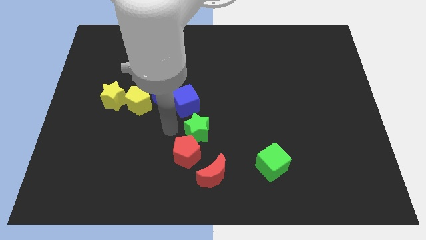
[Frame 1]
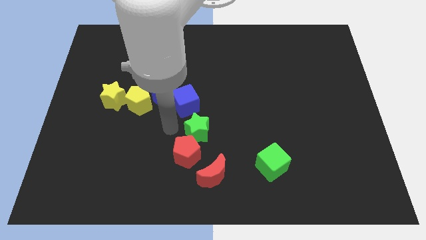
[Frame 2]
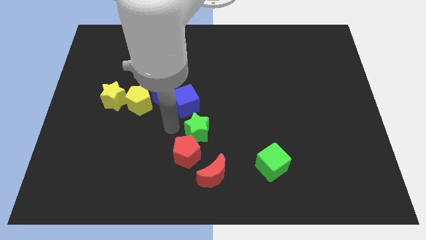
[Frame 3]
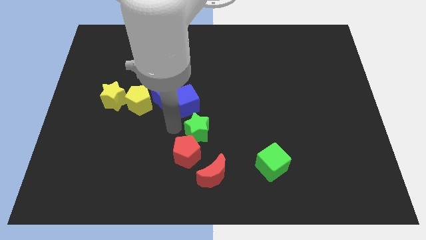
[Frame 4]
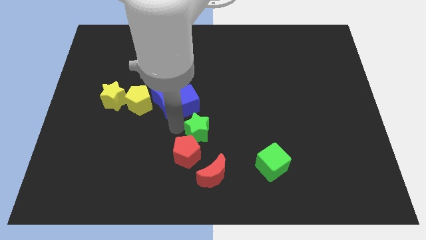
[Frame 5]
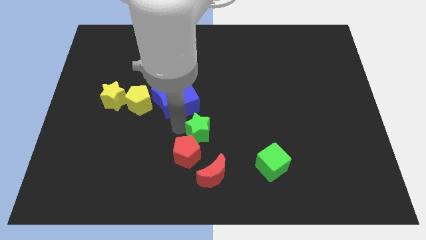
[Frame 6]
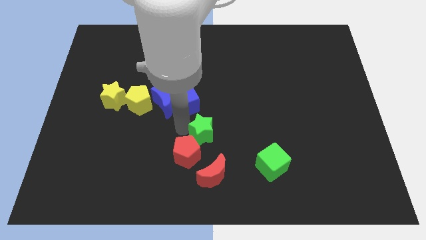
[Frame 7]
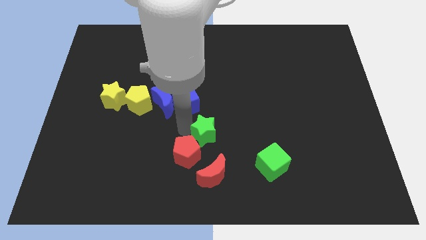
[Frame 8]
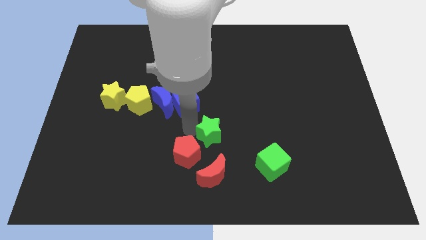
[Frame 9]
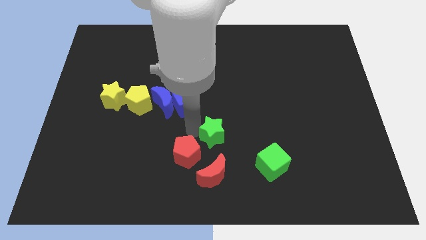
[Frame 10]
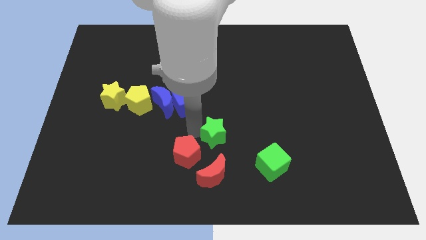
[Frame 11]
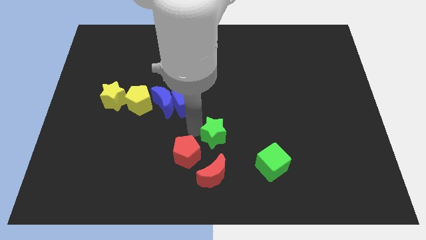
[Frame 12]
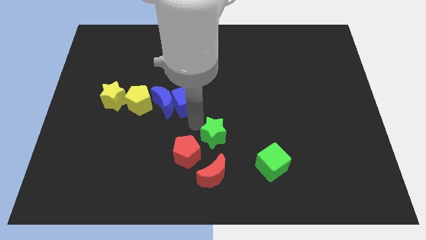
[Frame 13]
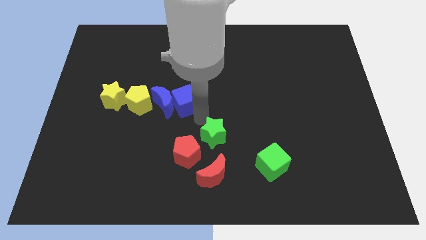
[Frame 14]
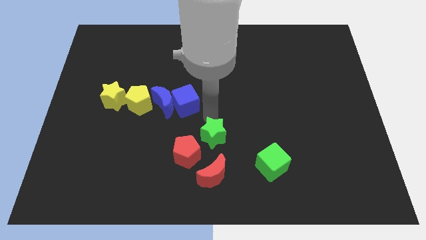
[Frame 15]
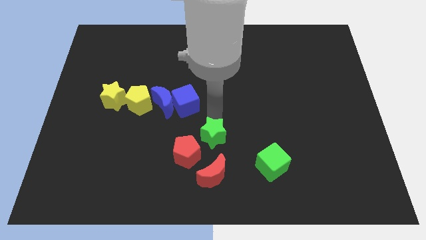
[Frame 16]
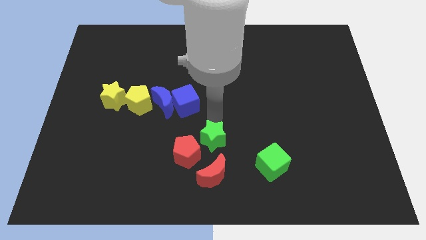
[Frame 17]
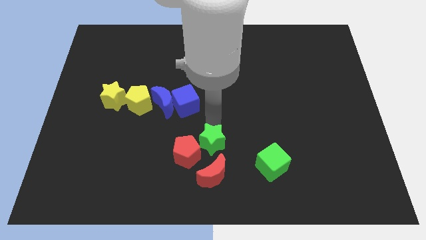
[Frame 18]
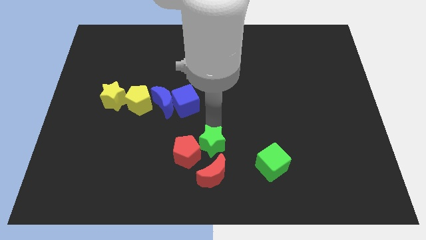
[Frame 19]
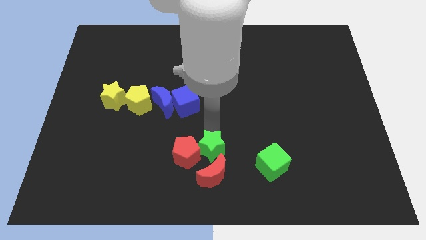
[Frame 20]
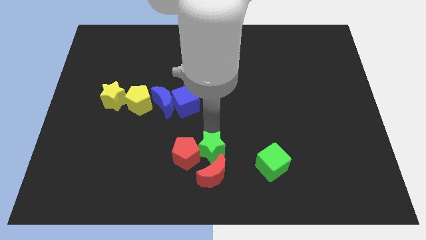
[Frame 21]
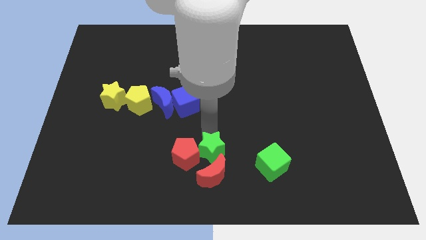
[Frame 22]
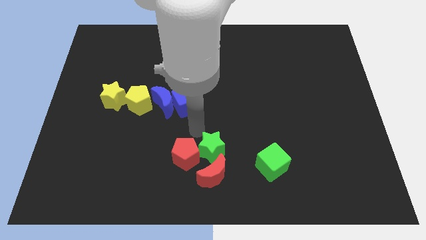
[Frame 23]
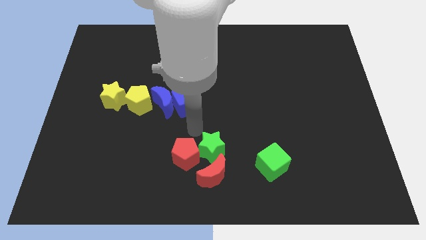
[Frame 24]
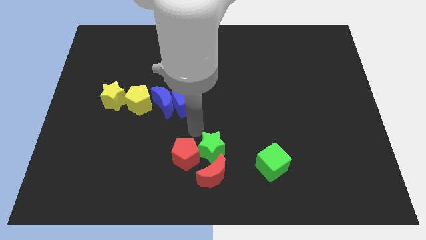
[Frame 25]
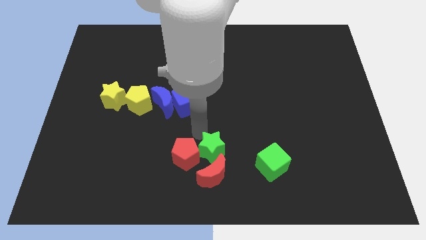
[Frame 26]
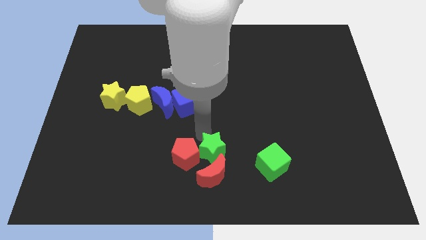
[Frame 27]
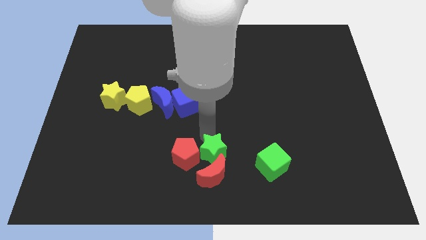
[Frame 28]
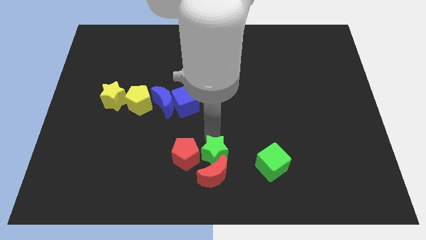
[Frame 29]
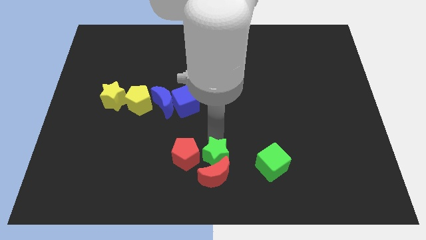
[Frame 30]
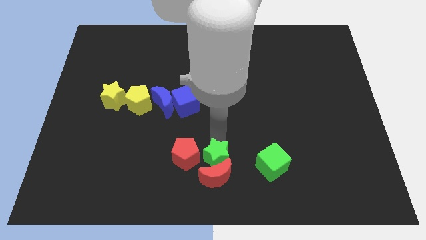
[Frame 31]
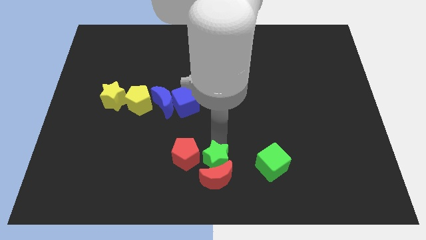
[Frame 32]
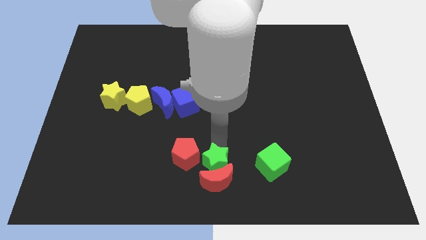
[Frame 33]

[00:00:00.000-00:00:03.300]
put the green star above the red moon

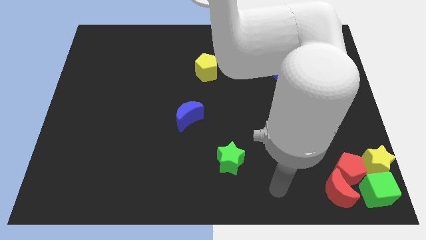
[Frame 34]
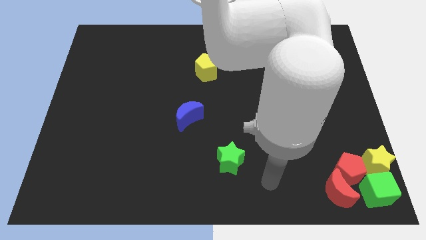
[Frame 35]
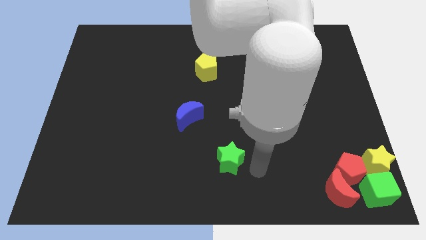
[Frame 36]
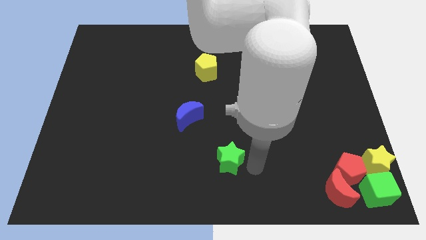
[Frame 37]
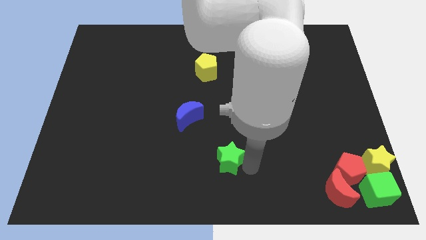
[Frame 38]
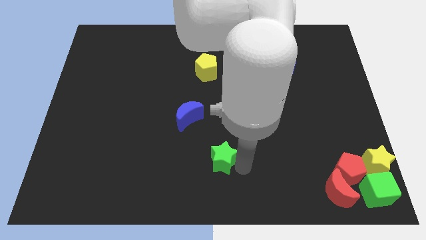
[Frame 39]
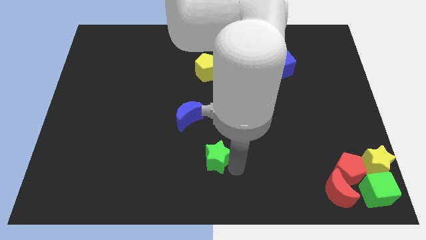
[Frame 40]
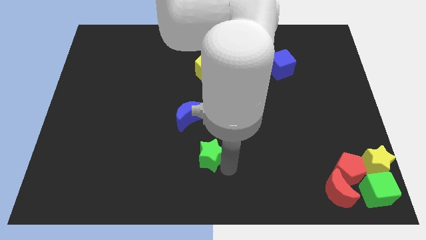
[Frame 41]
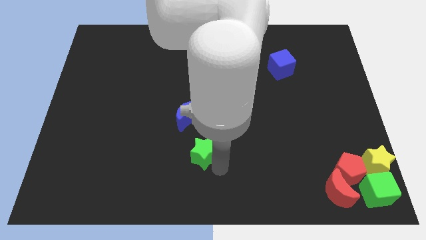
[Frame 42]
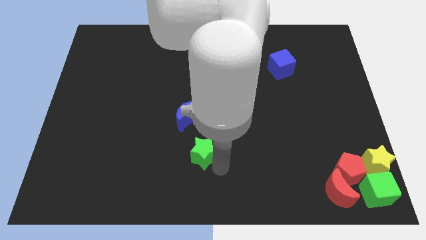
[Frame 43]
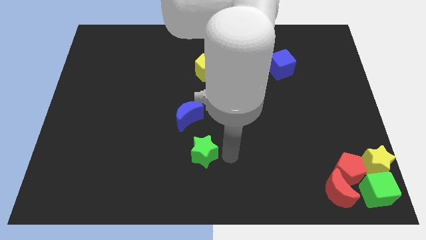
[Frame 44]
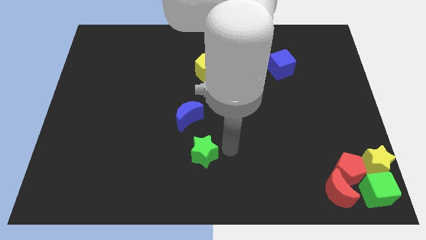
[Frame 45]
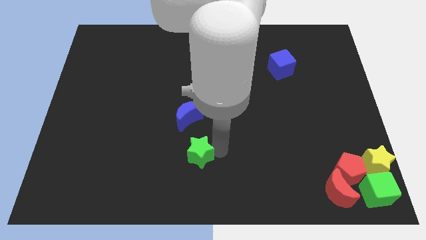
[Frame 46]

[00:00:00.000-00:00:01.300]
place the green star to the bottom of the blue crescent

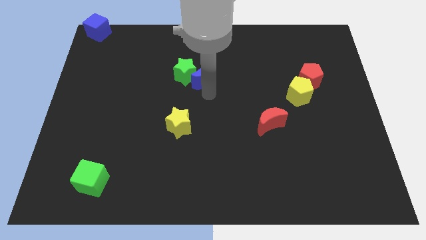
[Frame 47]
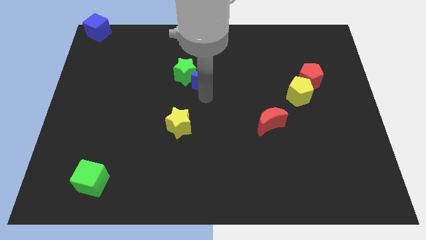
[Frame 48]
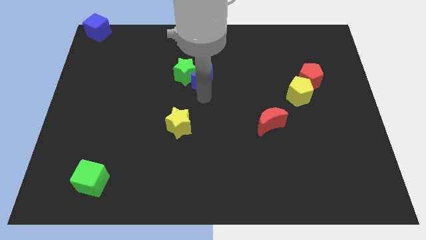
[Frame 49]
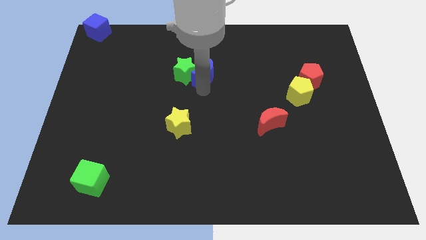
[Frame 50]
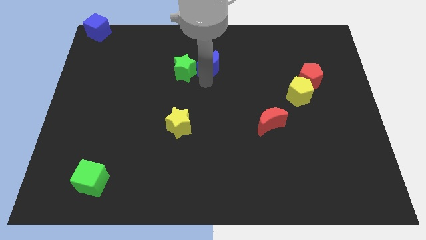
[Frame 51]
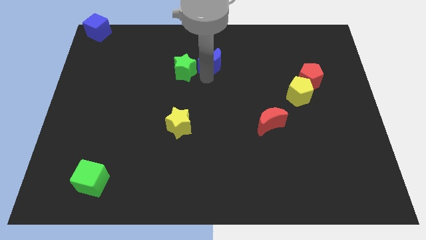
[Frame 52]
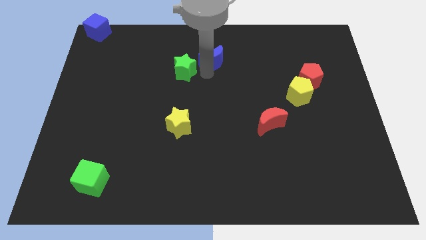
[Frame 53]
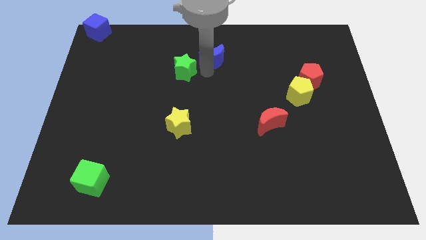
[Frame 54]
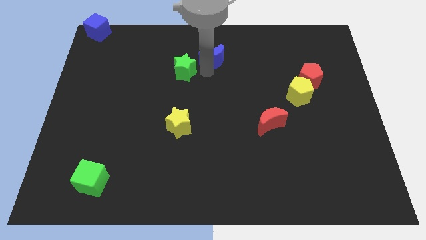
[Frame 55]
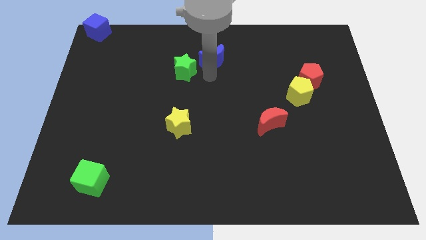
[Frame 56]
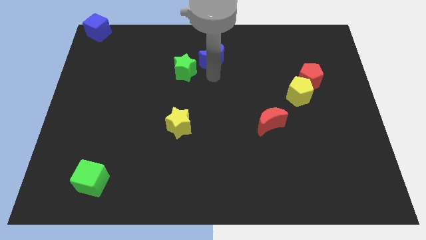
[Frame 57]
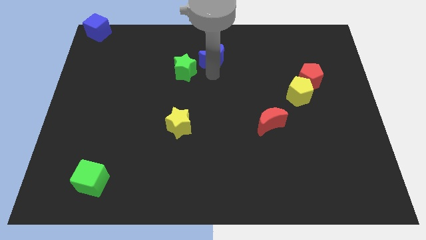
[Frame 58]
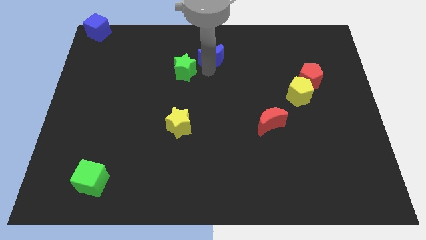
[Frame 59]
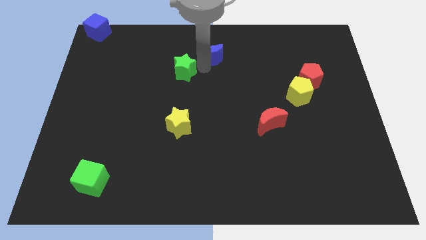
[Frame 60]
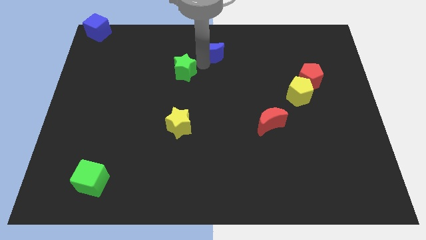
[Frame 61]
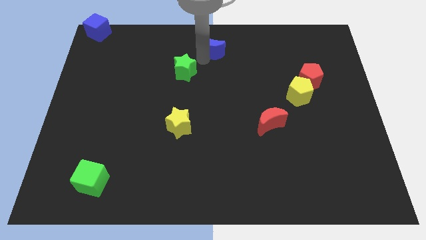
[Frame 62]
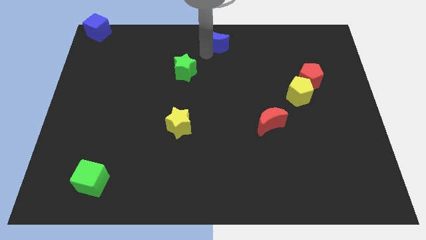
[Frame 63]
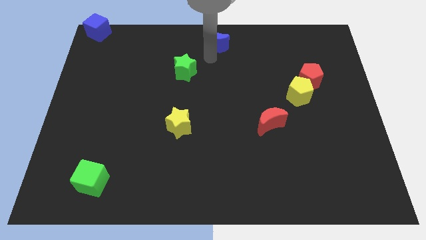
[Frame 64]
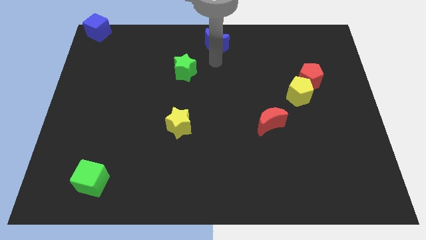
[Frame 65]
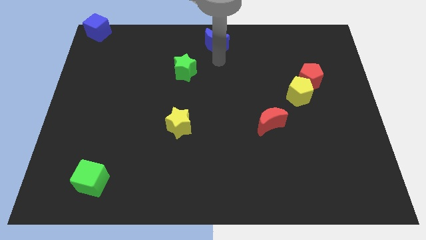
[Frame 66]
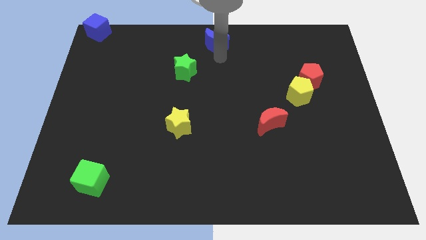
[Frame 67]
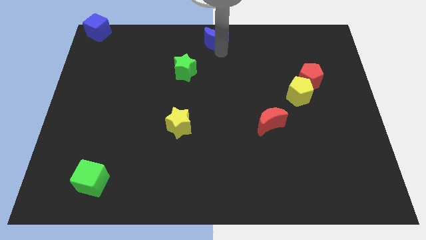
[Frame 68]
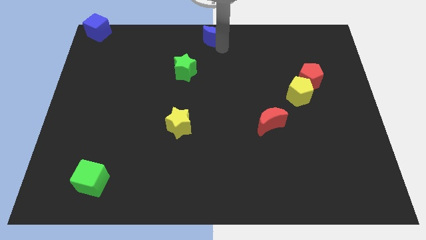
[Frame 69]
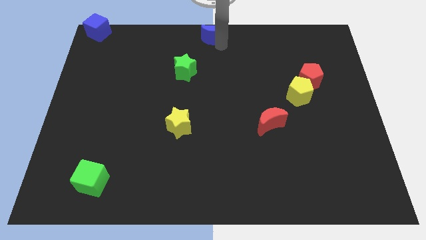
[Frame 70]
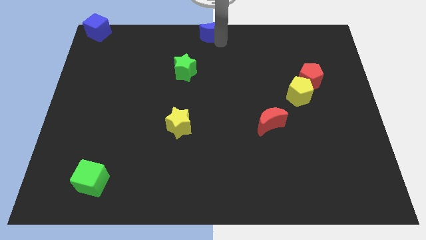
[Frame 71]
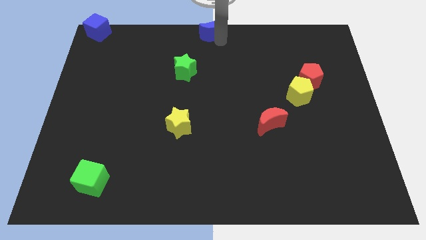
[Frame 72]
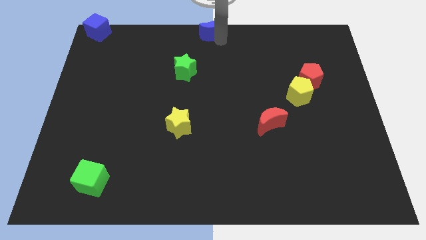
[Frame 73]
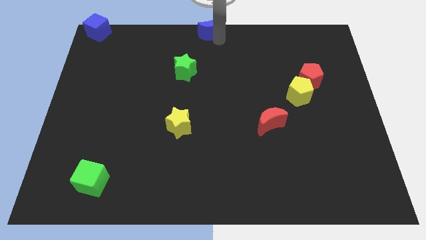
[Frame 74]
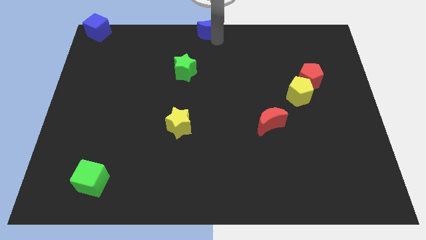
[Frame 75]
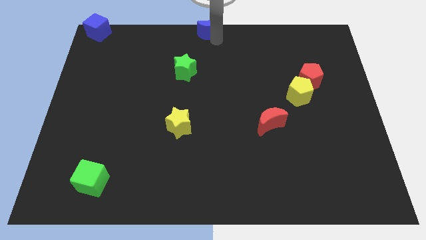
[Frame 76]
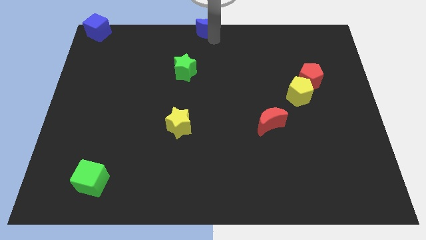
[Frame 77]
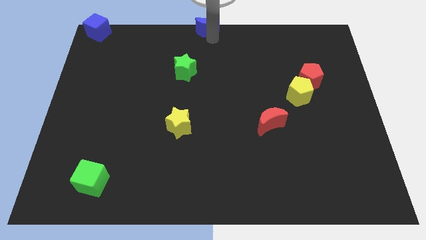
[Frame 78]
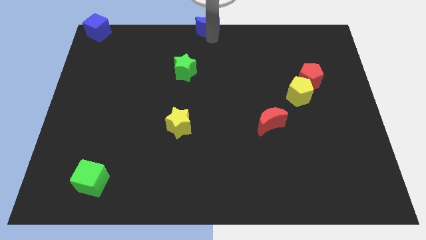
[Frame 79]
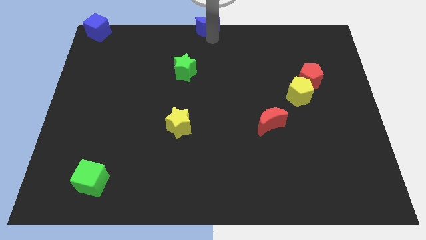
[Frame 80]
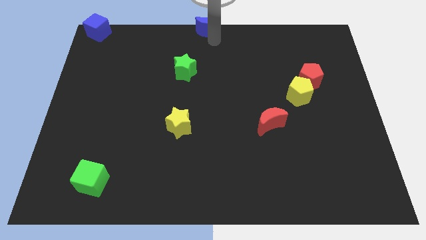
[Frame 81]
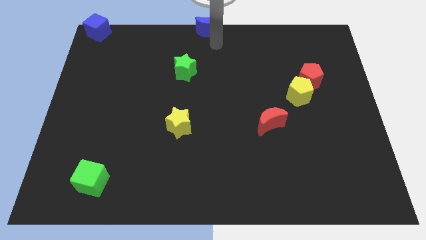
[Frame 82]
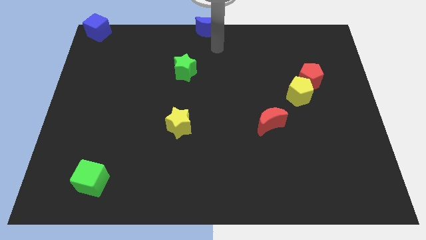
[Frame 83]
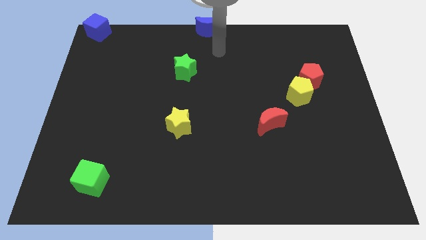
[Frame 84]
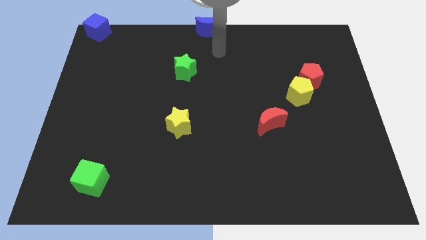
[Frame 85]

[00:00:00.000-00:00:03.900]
move the blue crescent to the top center of the board

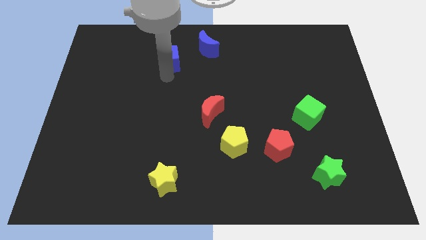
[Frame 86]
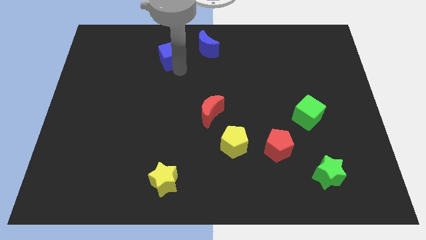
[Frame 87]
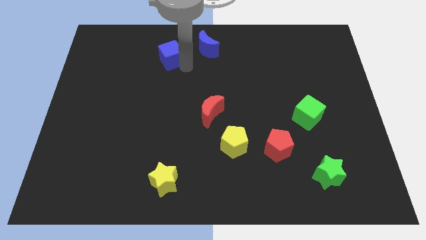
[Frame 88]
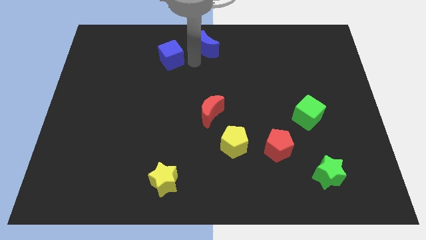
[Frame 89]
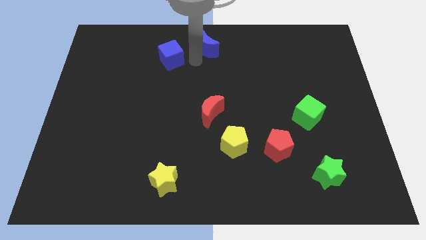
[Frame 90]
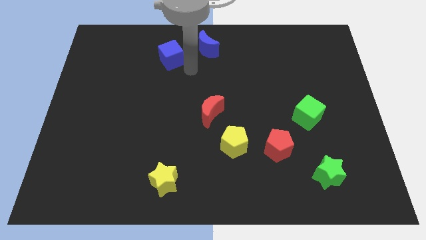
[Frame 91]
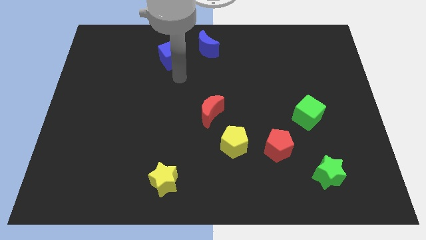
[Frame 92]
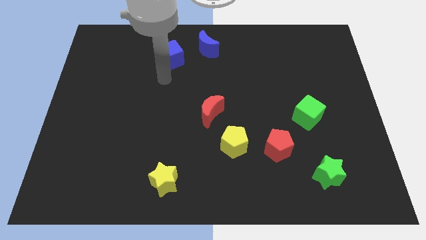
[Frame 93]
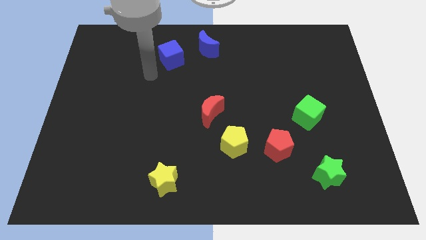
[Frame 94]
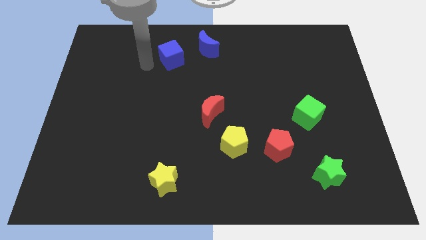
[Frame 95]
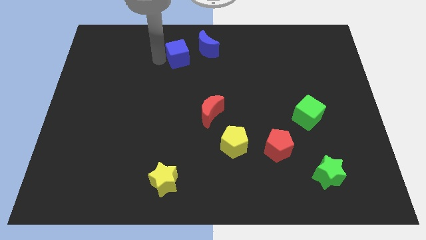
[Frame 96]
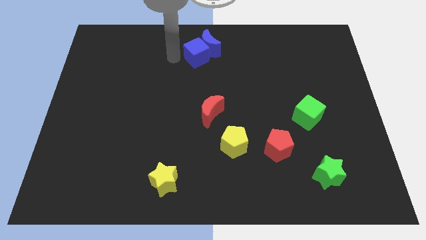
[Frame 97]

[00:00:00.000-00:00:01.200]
move blue cube to the left of the blue crescent
